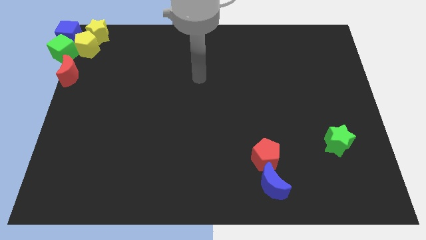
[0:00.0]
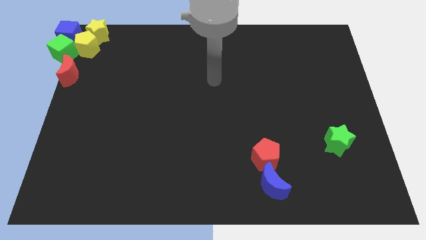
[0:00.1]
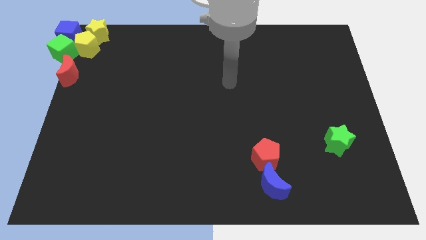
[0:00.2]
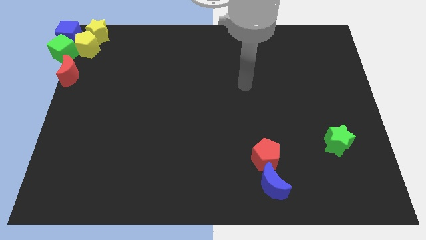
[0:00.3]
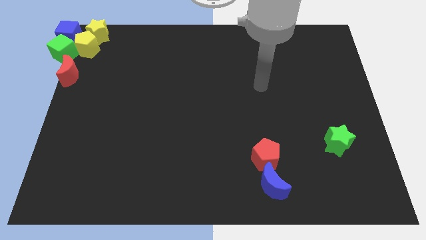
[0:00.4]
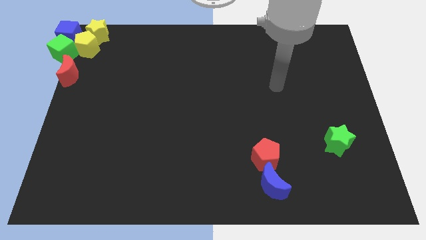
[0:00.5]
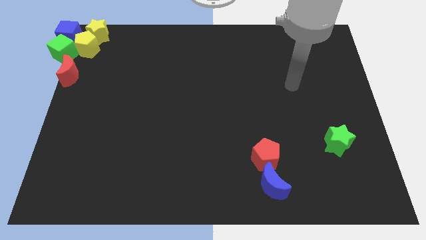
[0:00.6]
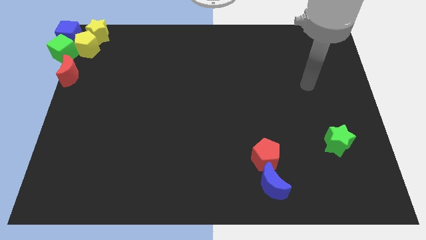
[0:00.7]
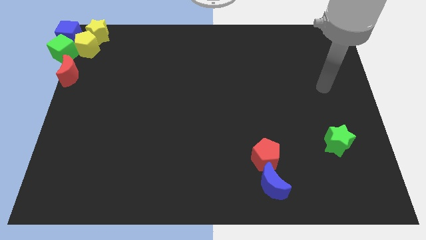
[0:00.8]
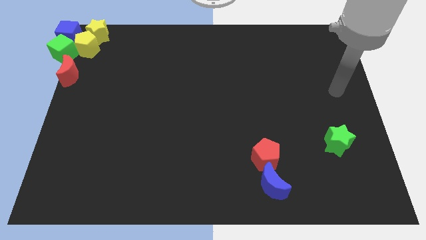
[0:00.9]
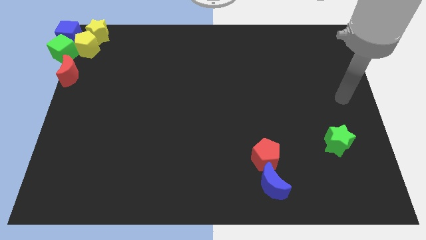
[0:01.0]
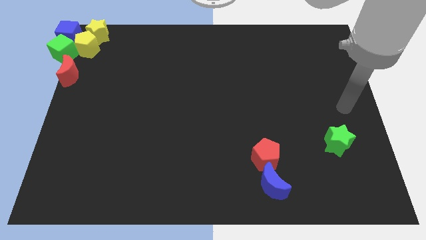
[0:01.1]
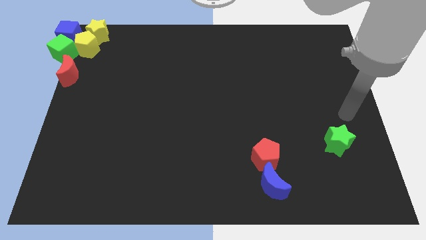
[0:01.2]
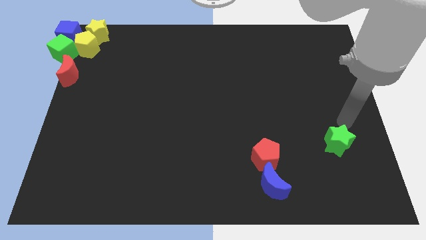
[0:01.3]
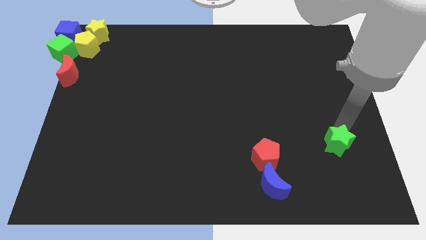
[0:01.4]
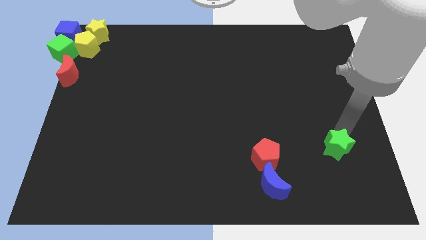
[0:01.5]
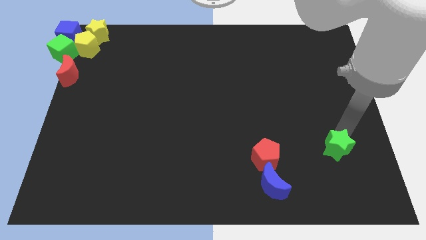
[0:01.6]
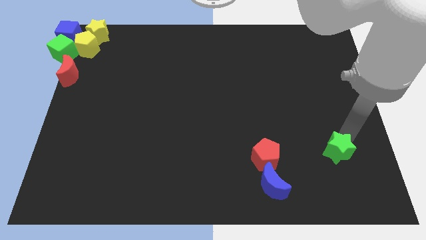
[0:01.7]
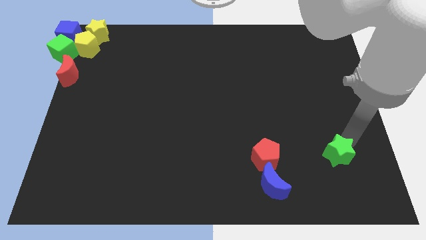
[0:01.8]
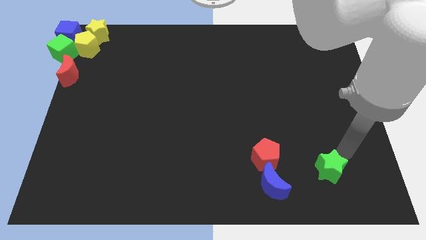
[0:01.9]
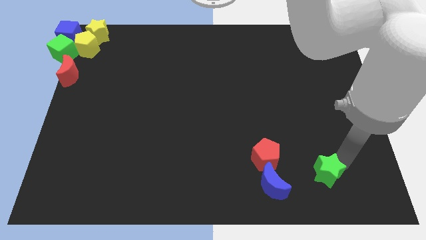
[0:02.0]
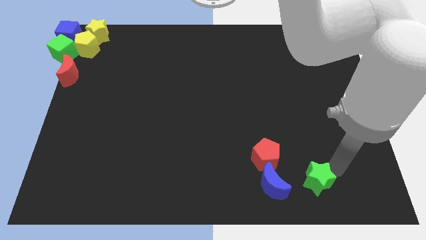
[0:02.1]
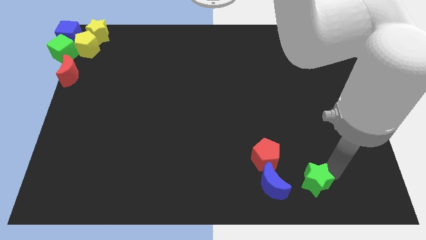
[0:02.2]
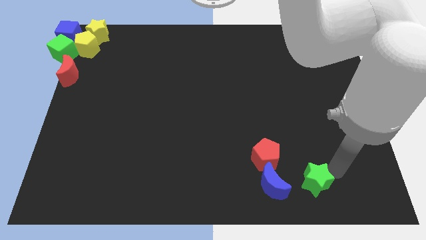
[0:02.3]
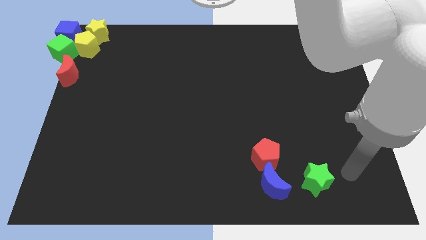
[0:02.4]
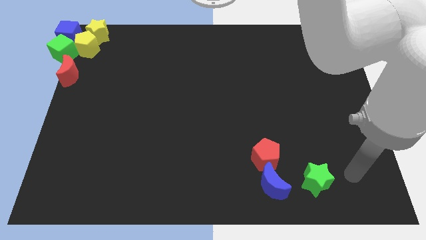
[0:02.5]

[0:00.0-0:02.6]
place the green star to the right side of blue moon

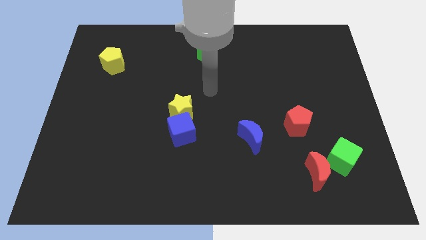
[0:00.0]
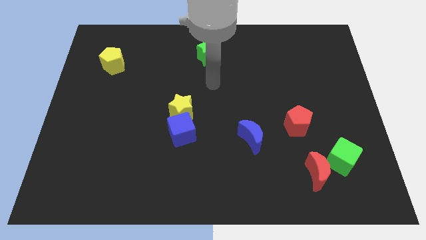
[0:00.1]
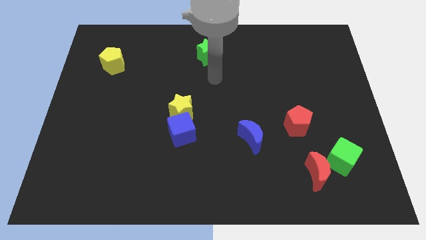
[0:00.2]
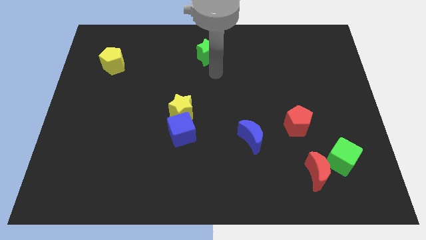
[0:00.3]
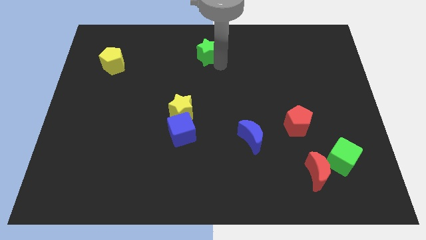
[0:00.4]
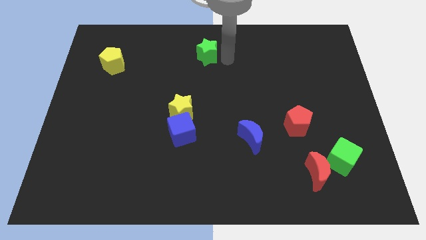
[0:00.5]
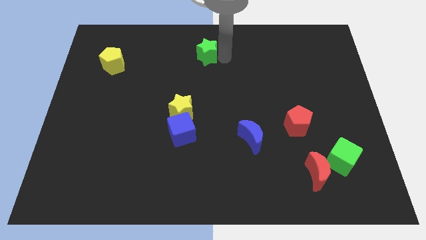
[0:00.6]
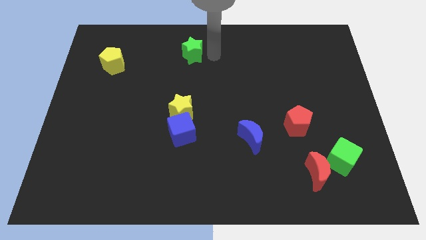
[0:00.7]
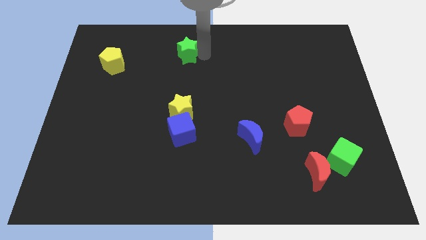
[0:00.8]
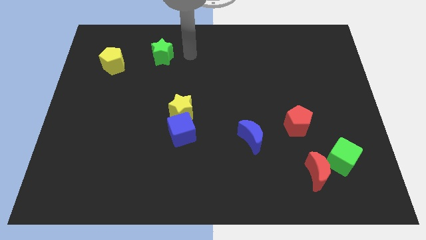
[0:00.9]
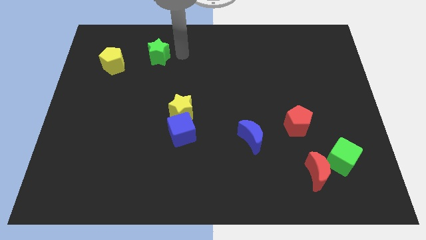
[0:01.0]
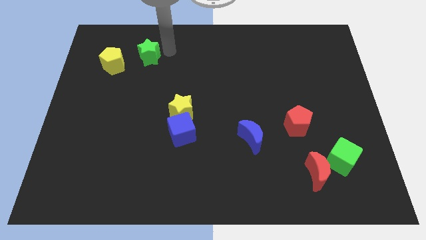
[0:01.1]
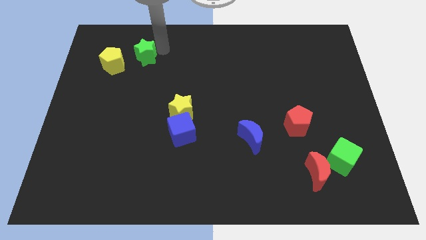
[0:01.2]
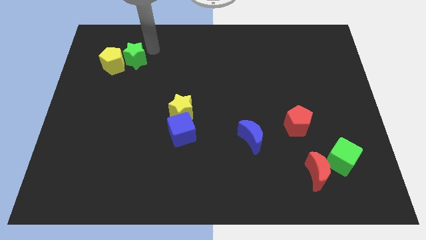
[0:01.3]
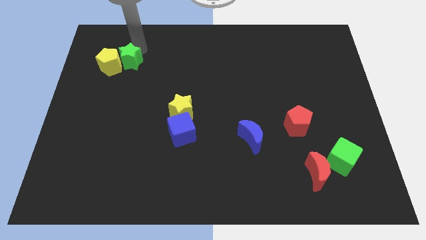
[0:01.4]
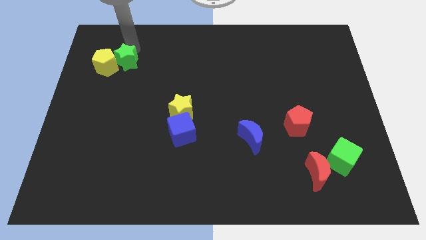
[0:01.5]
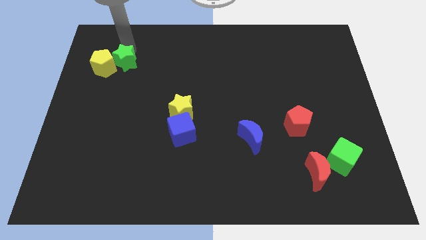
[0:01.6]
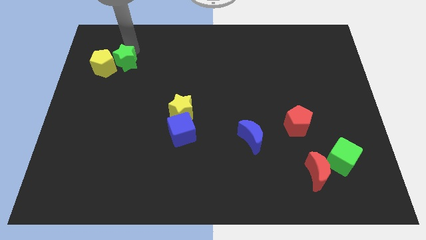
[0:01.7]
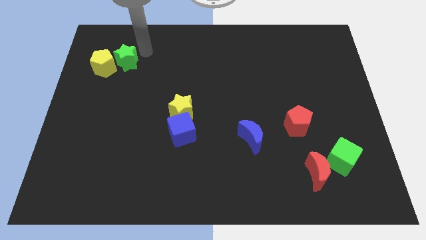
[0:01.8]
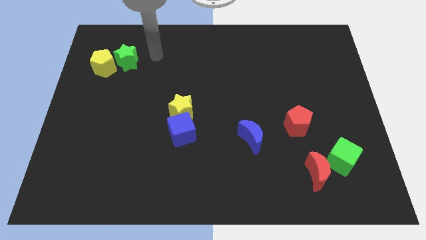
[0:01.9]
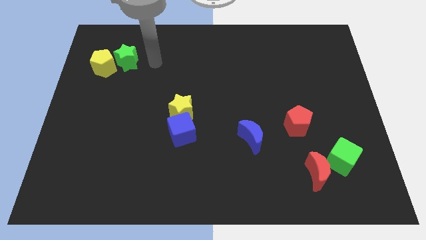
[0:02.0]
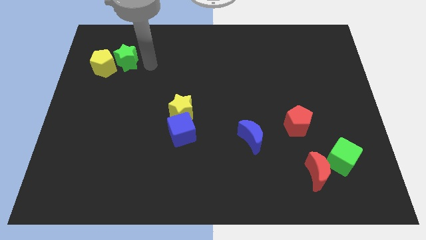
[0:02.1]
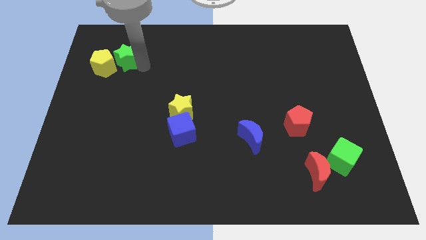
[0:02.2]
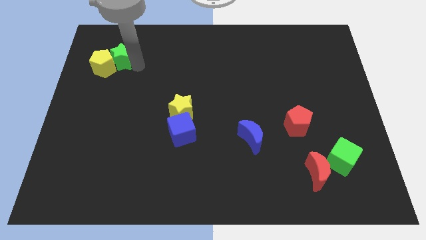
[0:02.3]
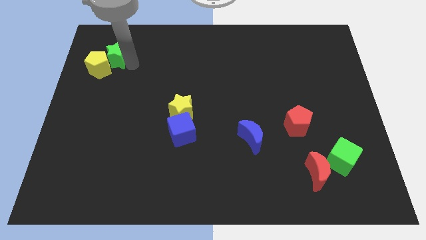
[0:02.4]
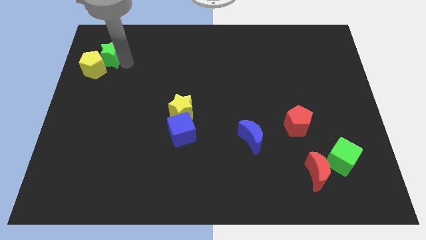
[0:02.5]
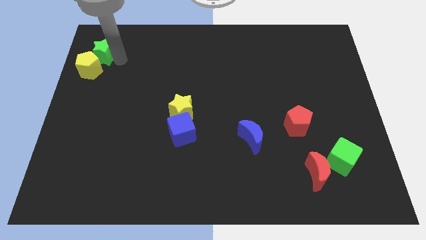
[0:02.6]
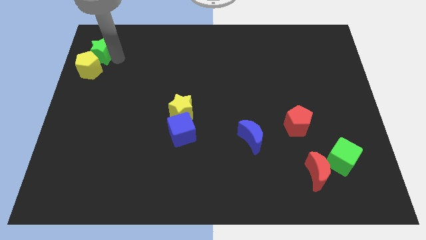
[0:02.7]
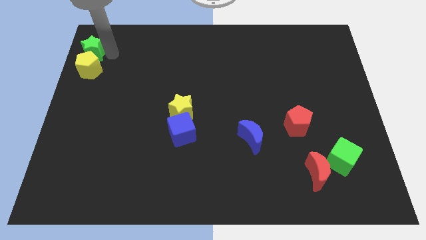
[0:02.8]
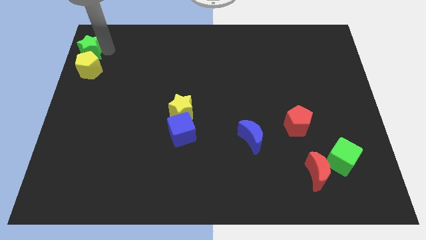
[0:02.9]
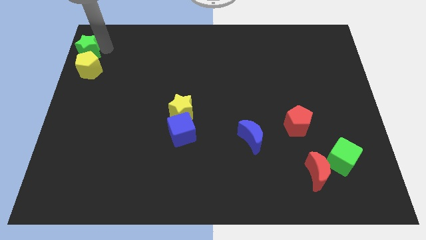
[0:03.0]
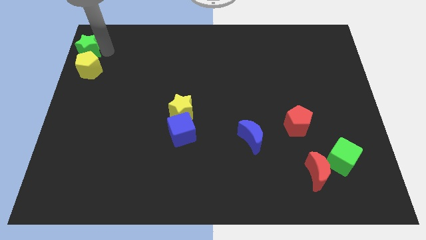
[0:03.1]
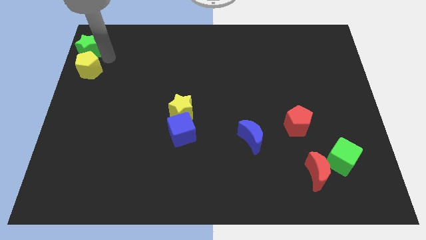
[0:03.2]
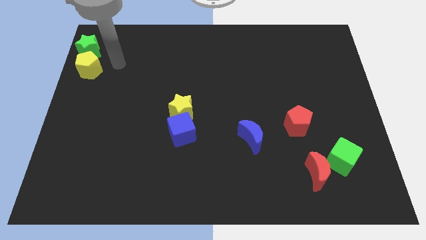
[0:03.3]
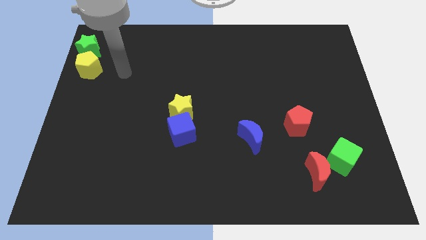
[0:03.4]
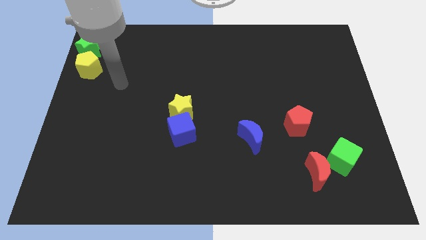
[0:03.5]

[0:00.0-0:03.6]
place green star to the top of yellow pentagon

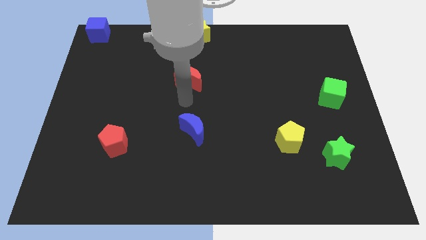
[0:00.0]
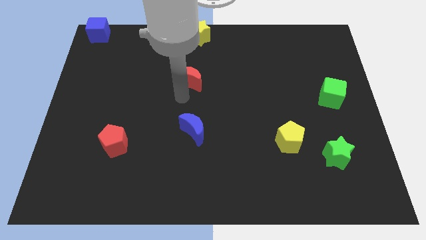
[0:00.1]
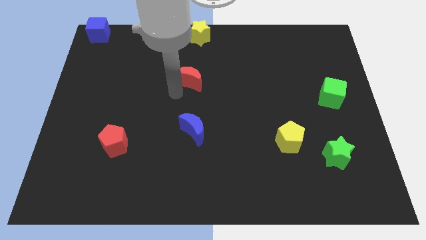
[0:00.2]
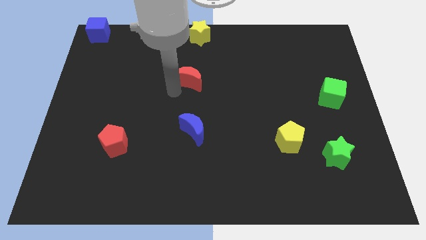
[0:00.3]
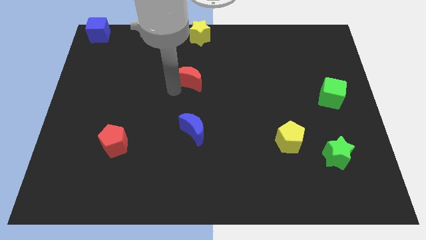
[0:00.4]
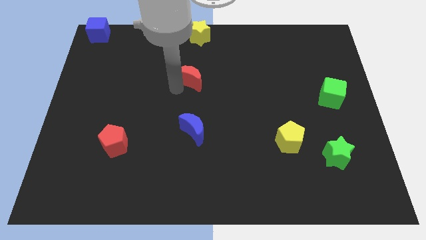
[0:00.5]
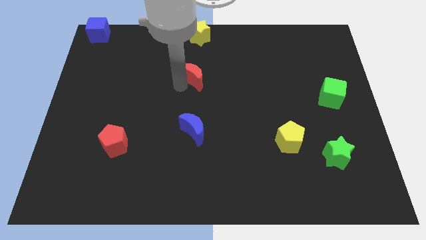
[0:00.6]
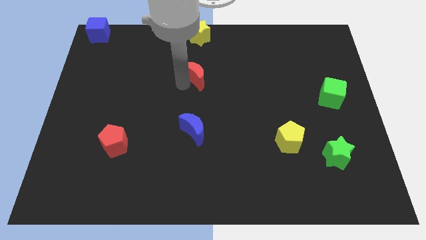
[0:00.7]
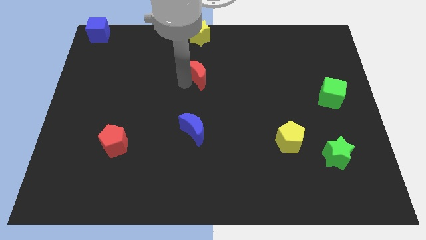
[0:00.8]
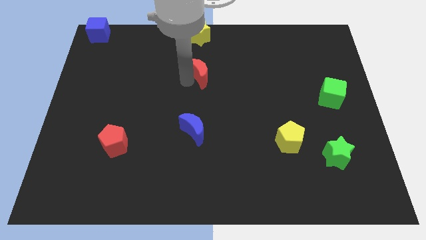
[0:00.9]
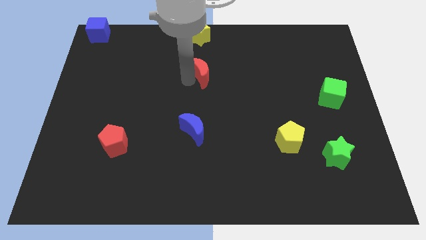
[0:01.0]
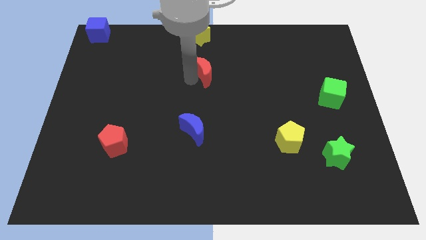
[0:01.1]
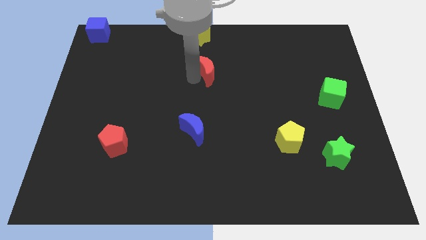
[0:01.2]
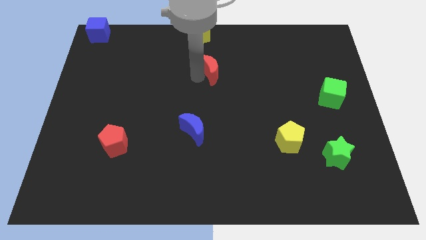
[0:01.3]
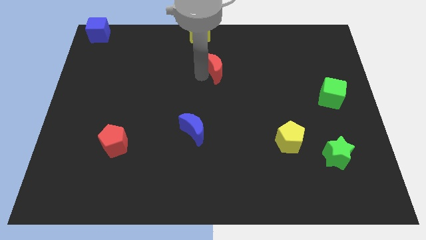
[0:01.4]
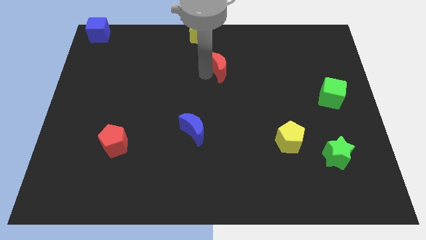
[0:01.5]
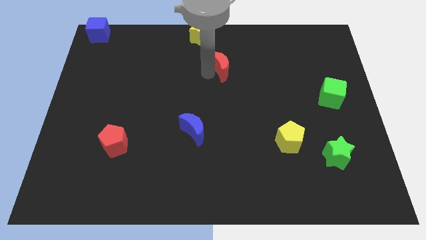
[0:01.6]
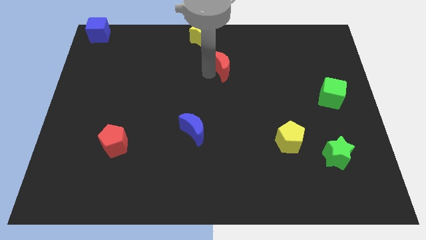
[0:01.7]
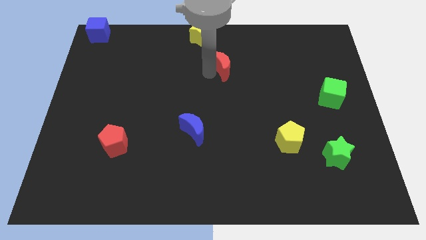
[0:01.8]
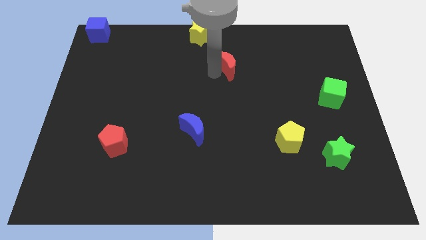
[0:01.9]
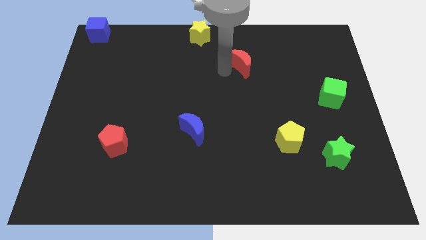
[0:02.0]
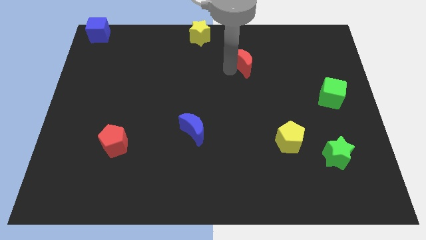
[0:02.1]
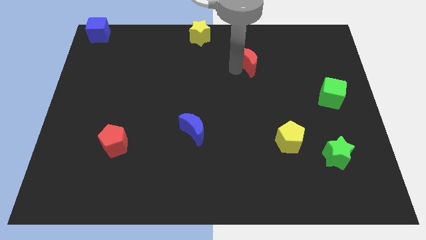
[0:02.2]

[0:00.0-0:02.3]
move the red moon between yellow blocks

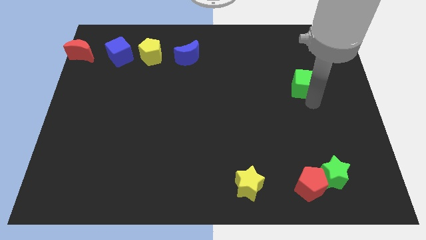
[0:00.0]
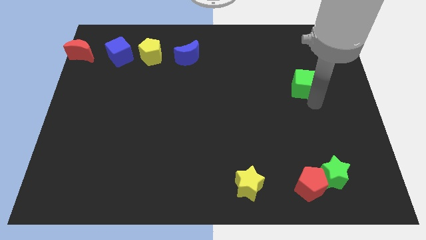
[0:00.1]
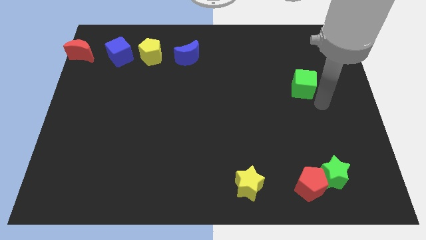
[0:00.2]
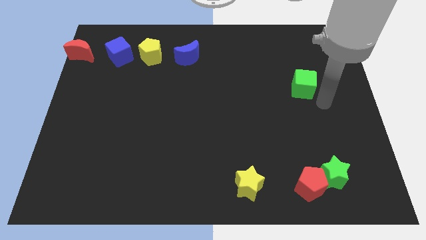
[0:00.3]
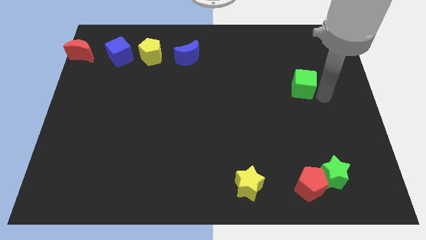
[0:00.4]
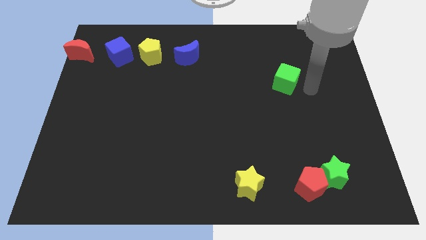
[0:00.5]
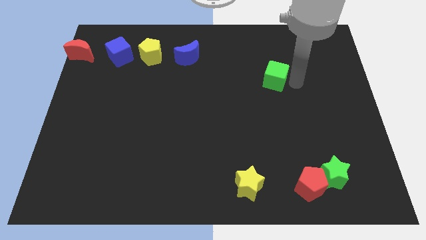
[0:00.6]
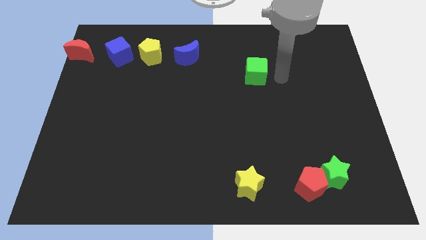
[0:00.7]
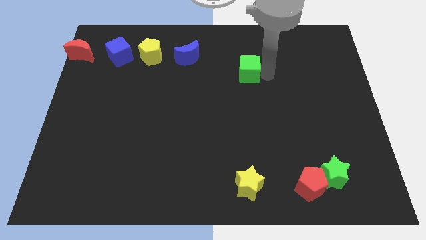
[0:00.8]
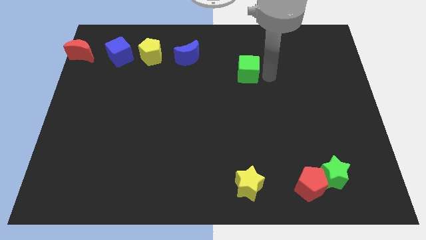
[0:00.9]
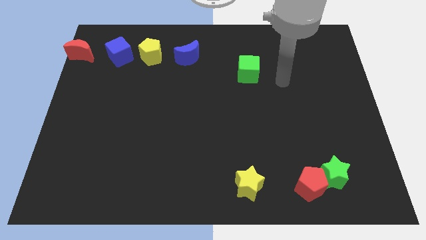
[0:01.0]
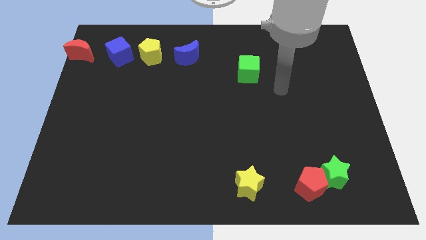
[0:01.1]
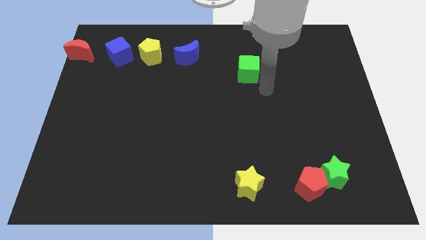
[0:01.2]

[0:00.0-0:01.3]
slide the green cube slightly towards the blue crescent
